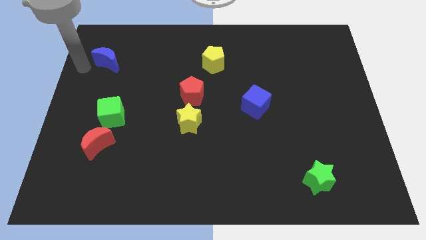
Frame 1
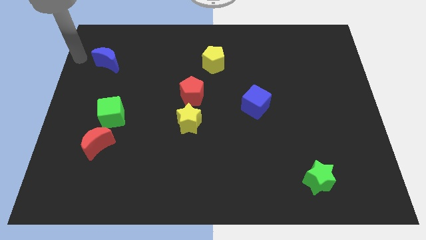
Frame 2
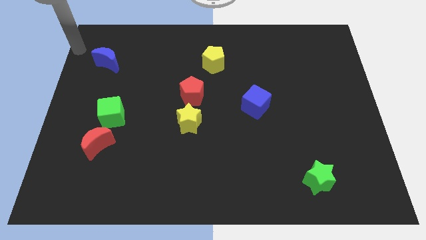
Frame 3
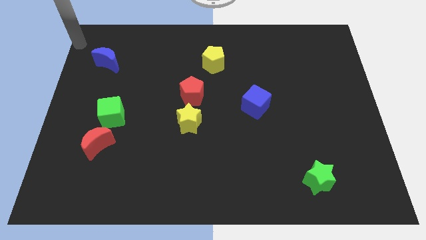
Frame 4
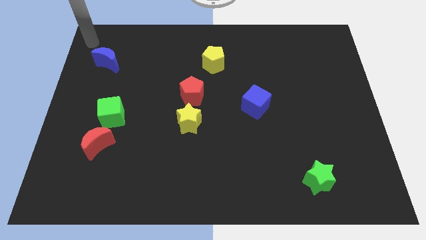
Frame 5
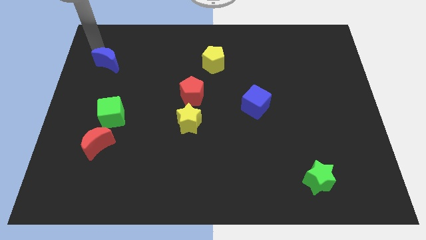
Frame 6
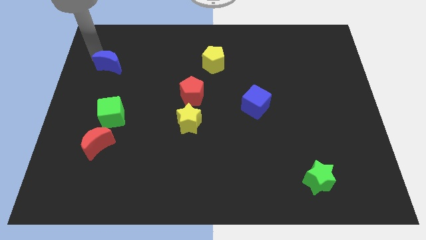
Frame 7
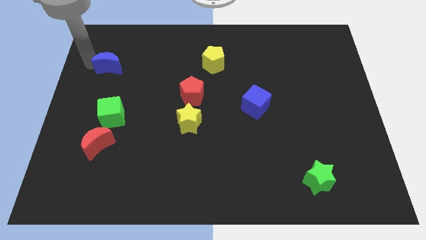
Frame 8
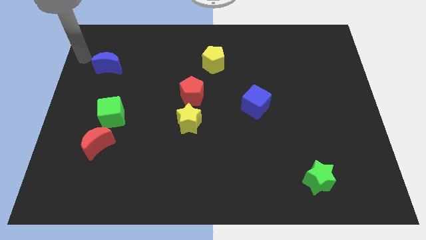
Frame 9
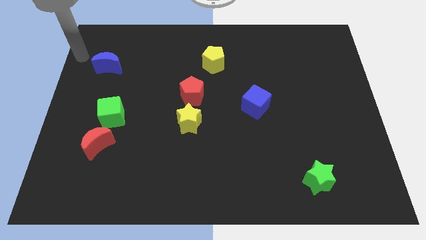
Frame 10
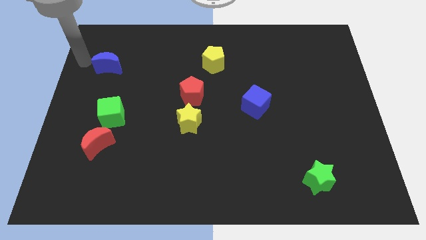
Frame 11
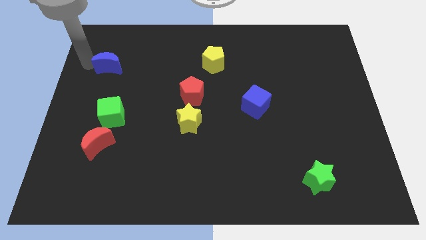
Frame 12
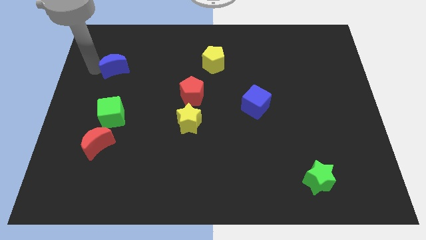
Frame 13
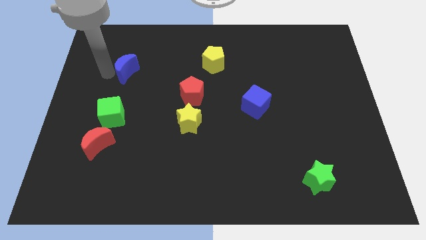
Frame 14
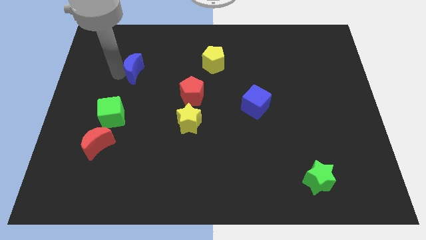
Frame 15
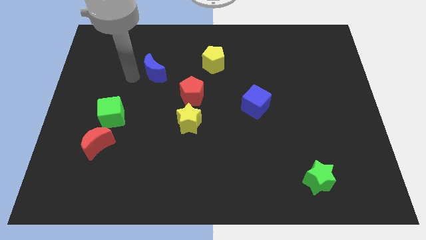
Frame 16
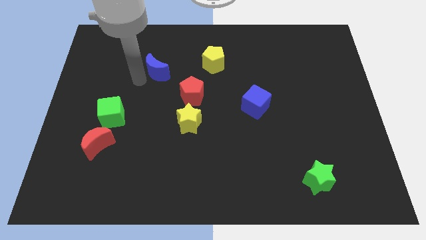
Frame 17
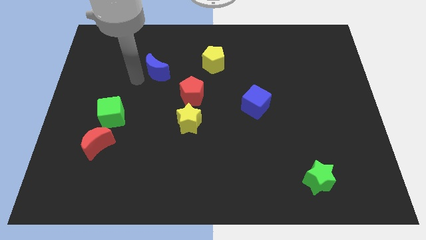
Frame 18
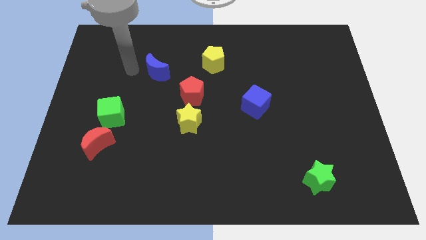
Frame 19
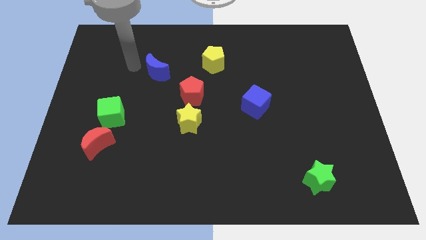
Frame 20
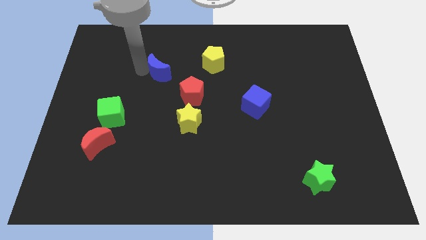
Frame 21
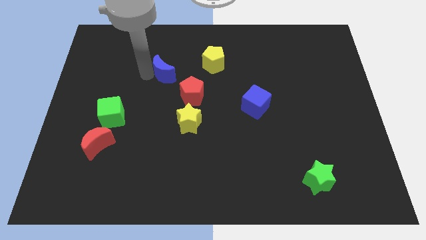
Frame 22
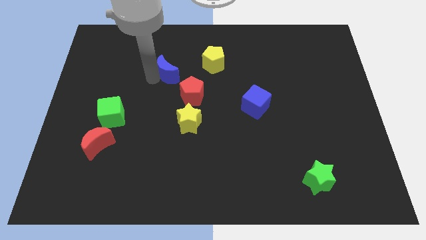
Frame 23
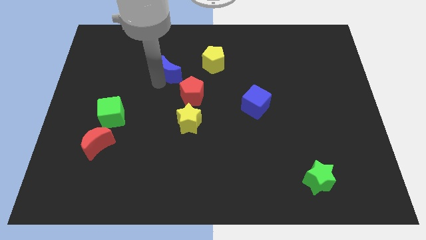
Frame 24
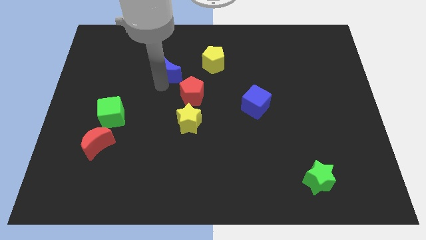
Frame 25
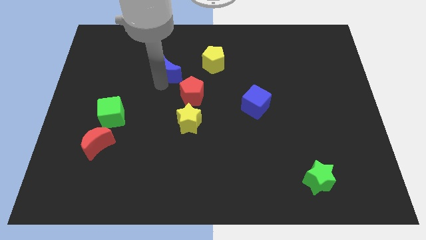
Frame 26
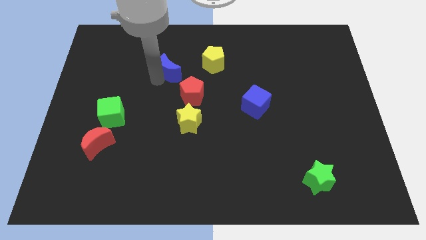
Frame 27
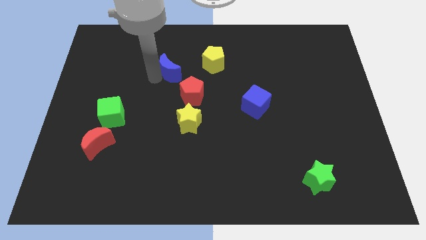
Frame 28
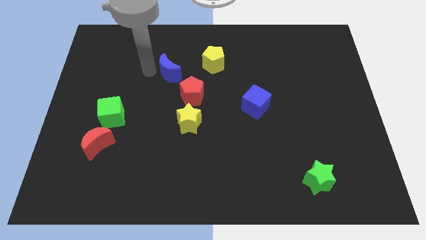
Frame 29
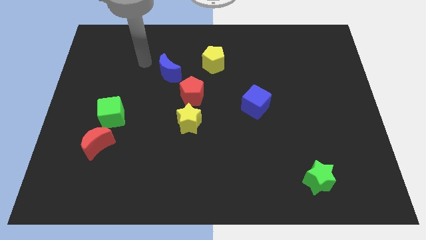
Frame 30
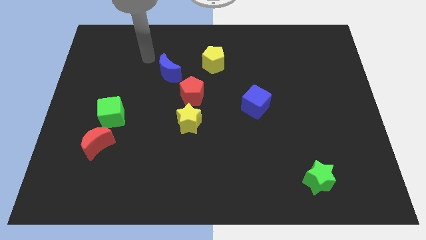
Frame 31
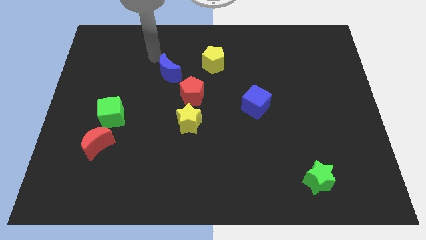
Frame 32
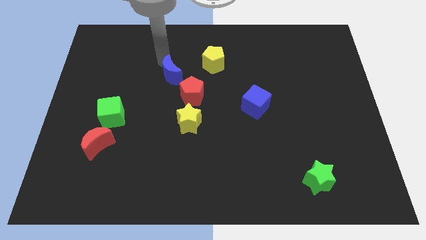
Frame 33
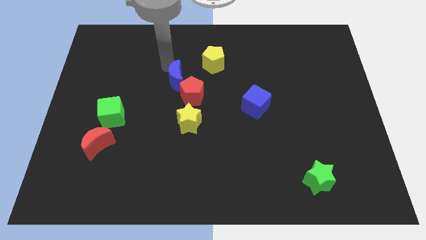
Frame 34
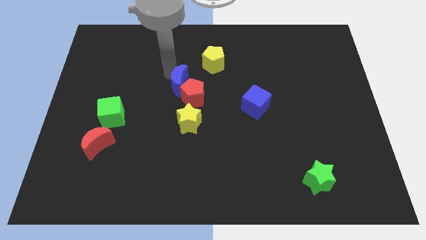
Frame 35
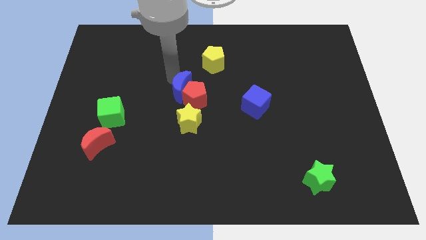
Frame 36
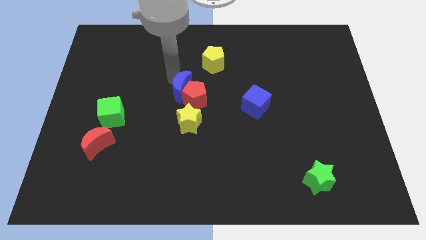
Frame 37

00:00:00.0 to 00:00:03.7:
push the blue moon into the red pentagon

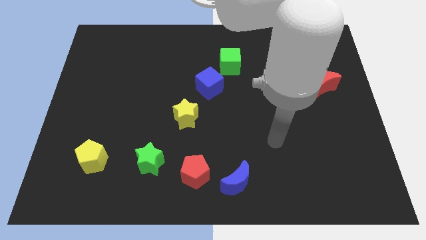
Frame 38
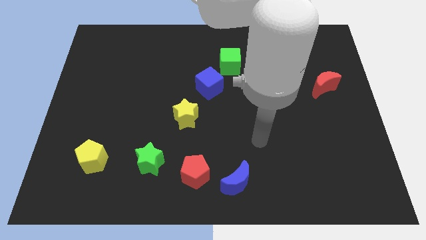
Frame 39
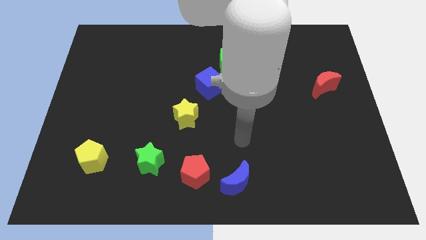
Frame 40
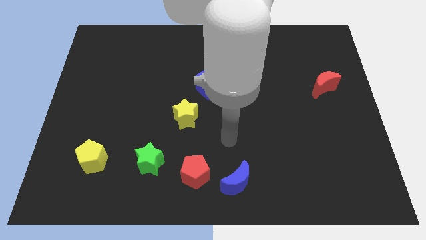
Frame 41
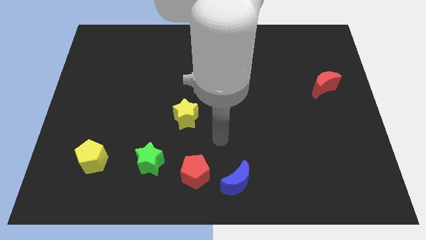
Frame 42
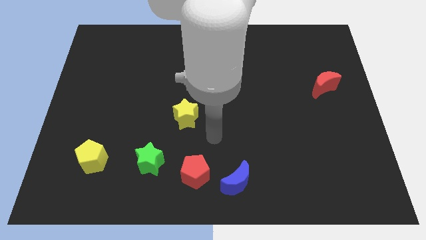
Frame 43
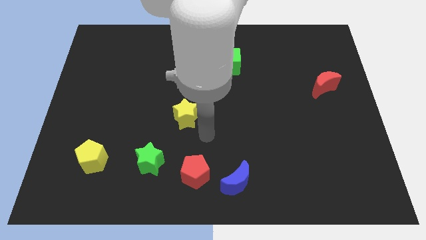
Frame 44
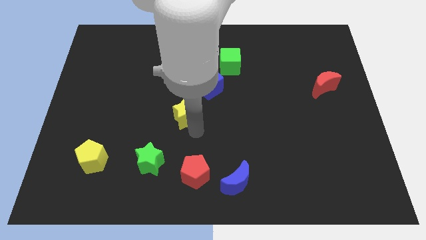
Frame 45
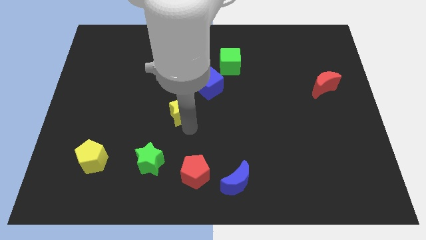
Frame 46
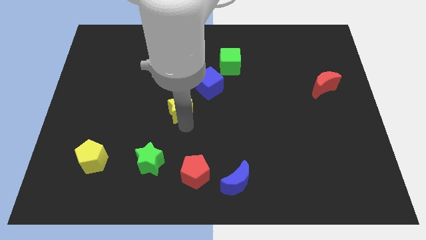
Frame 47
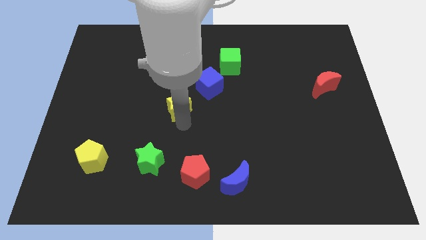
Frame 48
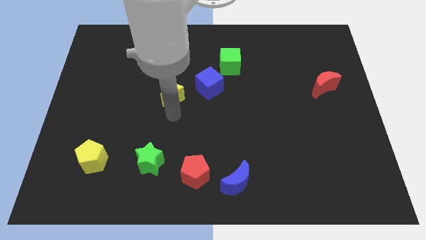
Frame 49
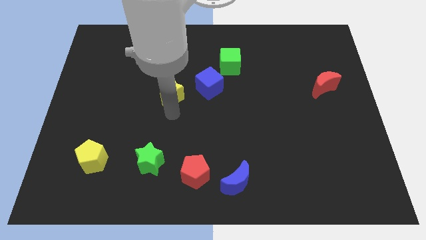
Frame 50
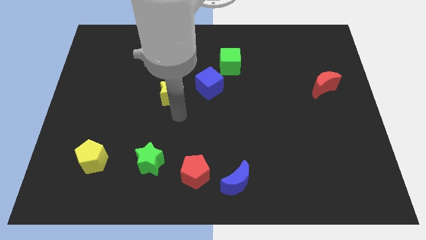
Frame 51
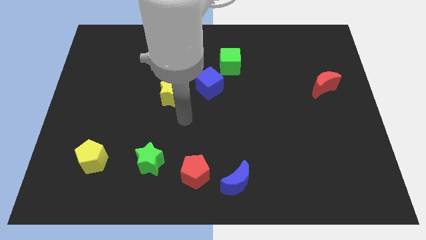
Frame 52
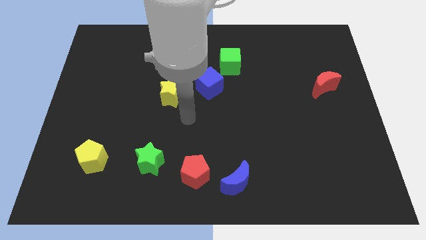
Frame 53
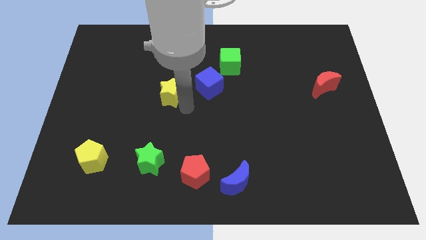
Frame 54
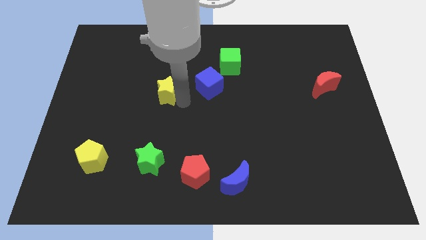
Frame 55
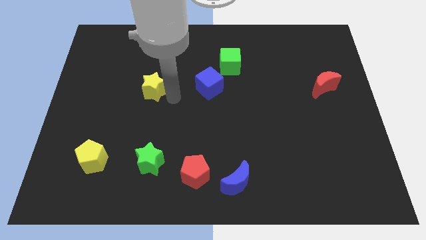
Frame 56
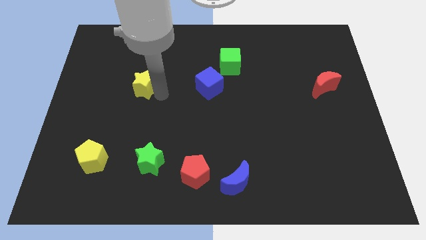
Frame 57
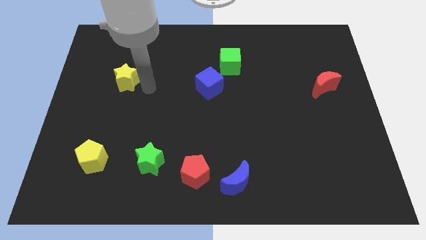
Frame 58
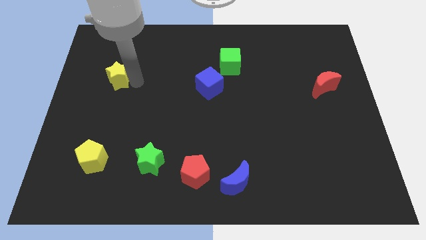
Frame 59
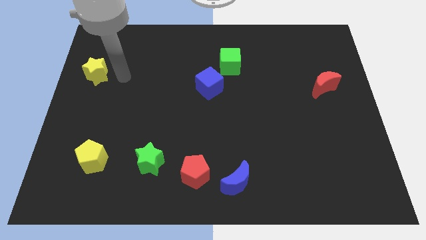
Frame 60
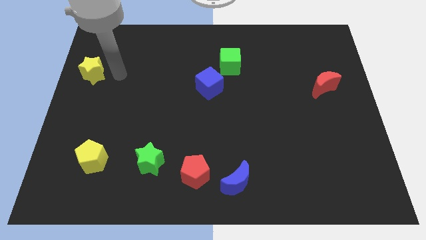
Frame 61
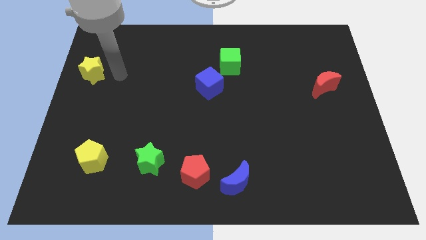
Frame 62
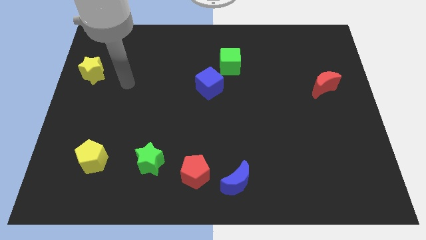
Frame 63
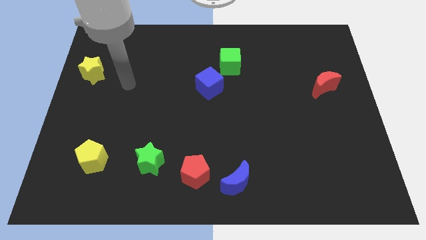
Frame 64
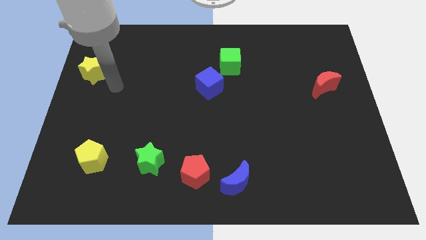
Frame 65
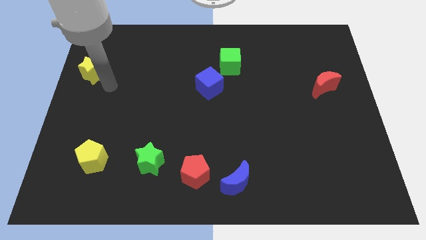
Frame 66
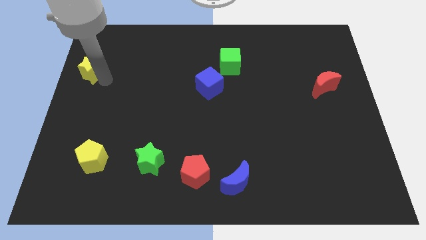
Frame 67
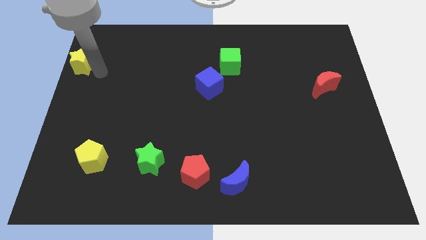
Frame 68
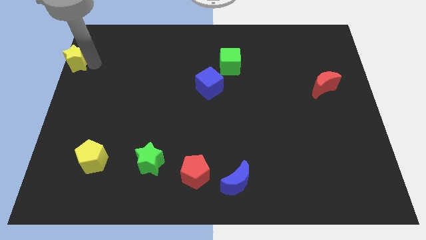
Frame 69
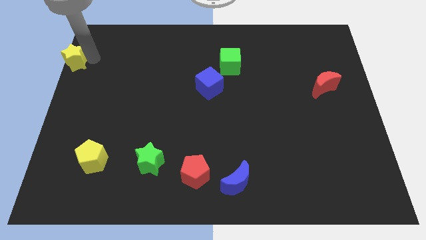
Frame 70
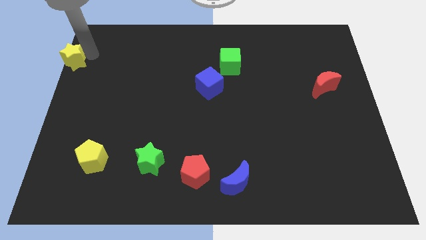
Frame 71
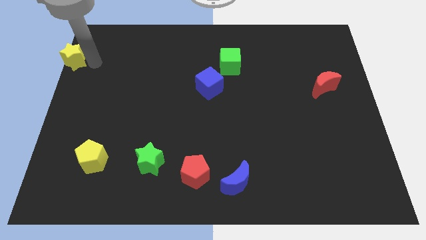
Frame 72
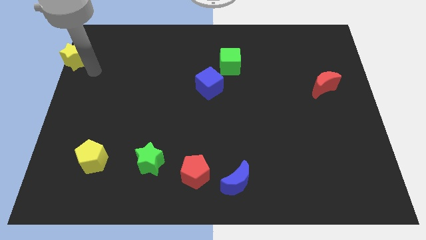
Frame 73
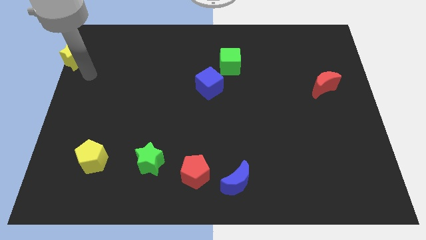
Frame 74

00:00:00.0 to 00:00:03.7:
move yellow star to the top left side

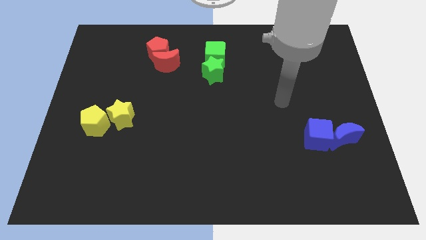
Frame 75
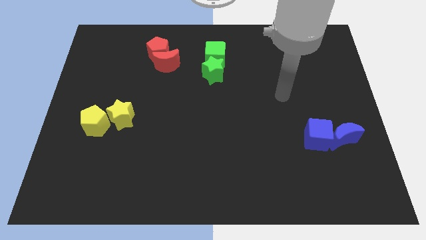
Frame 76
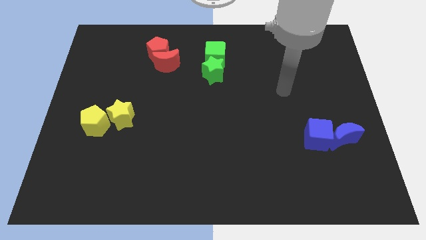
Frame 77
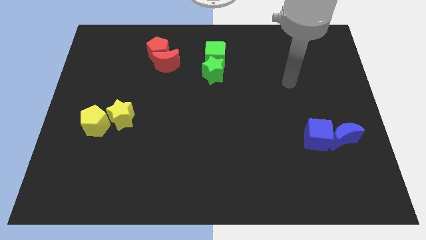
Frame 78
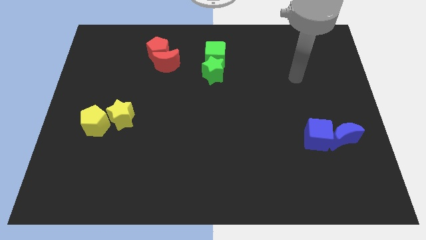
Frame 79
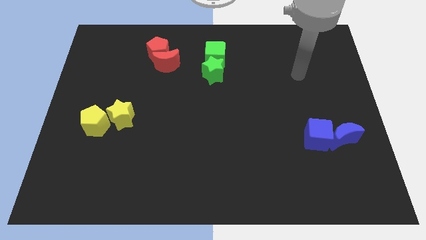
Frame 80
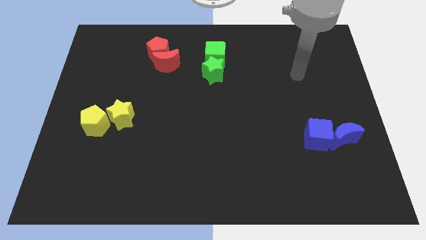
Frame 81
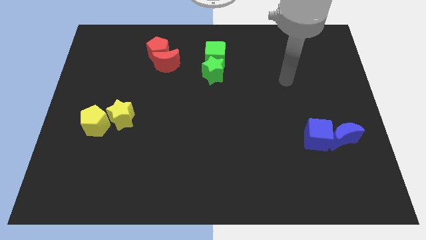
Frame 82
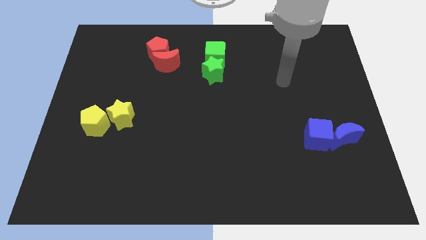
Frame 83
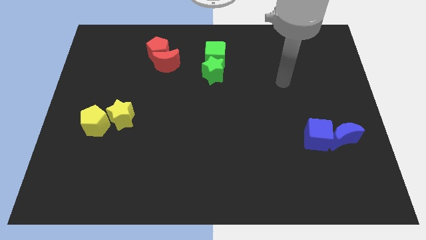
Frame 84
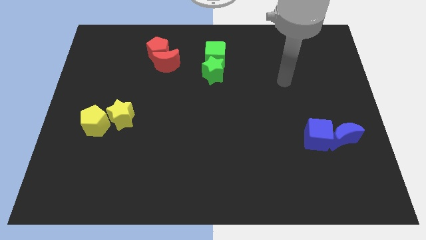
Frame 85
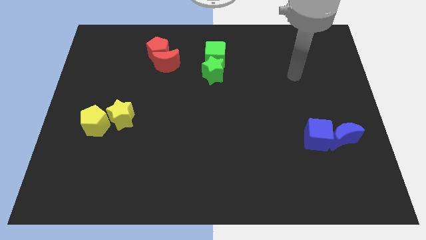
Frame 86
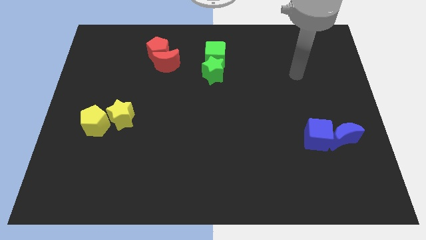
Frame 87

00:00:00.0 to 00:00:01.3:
move the arm slightly upwards to the top right

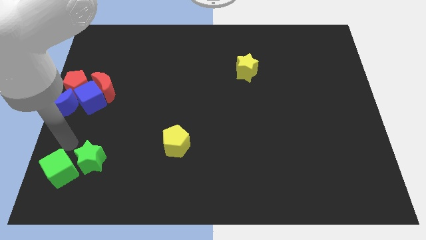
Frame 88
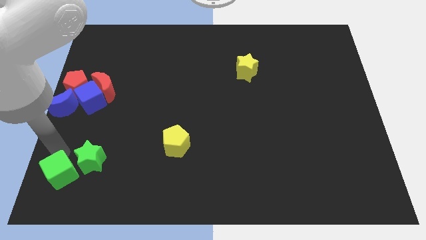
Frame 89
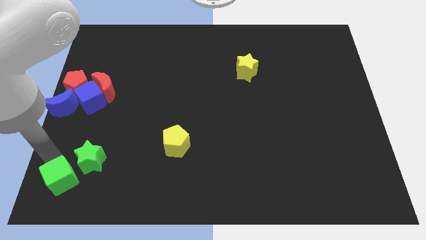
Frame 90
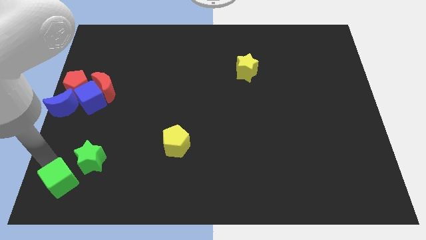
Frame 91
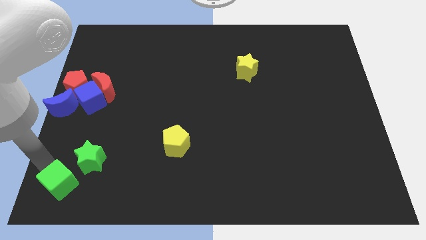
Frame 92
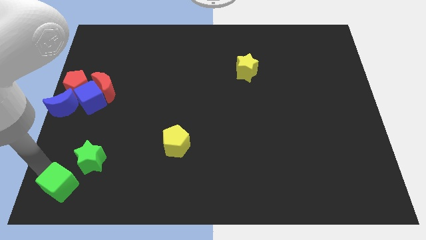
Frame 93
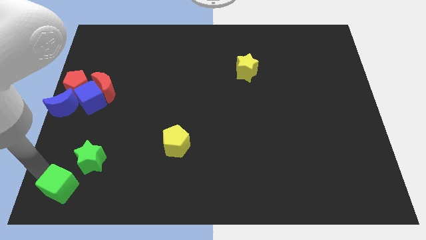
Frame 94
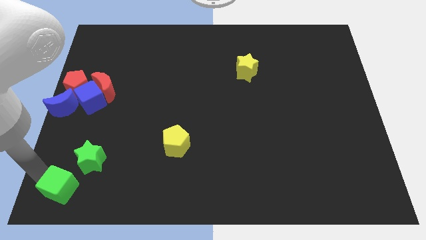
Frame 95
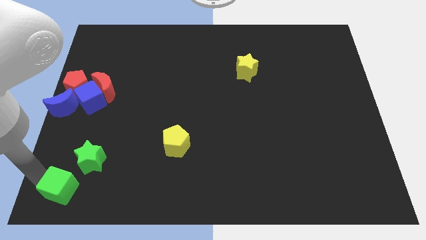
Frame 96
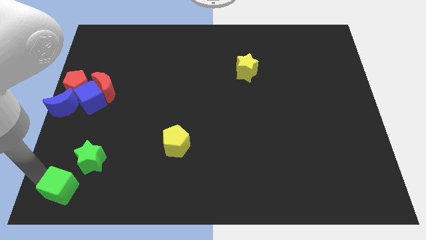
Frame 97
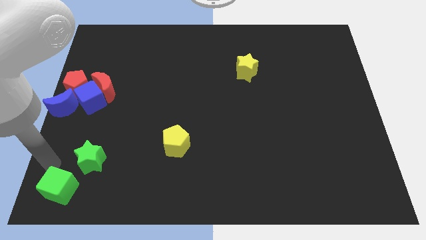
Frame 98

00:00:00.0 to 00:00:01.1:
push the green cube to the bottom left to the board
